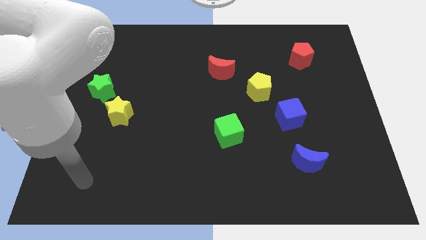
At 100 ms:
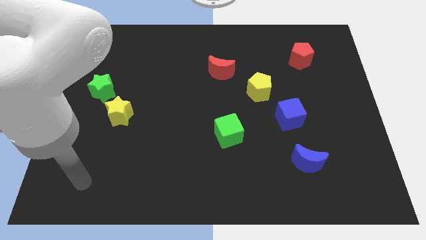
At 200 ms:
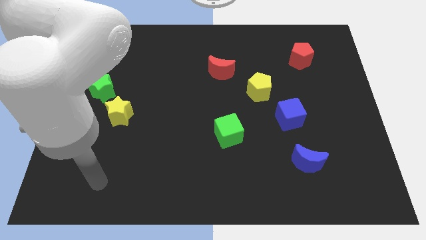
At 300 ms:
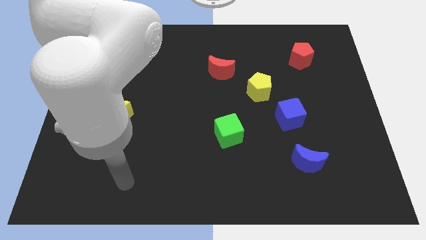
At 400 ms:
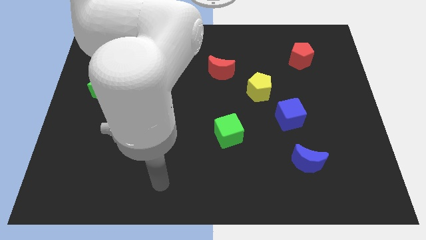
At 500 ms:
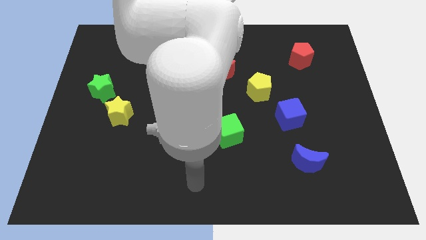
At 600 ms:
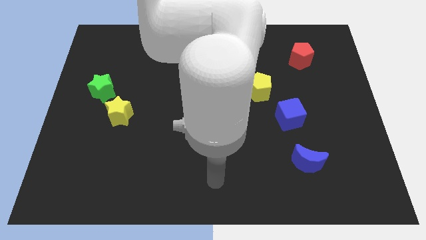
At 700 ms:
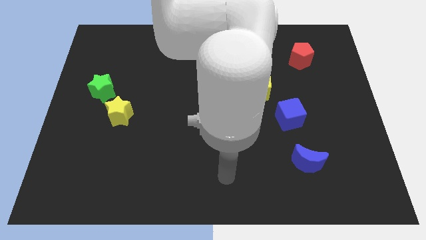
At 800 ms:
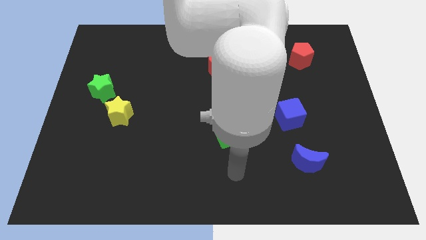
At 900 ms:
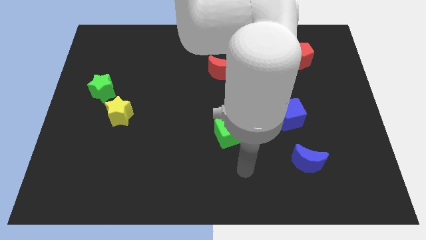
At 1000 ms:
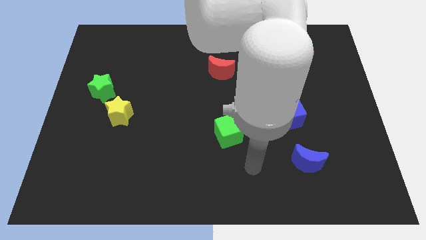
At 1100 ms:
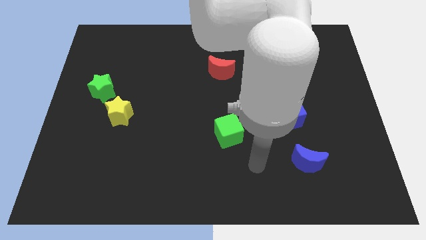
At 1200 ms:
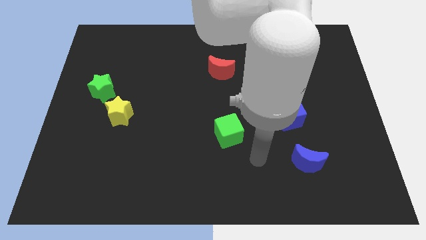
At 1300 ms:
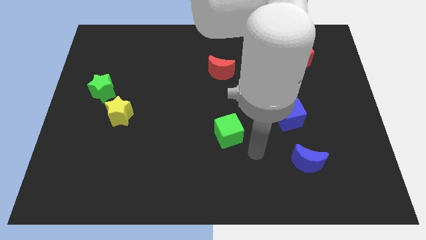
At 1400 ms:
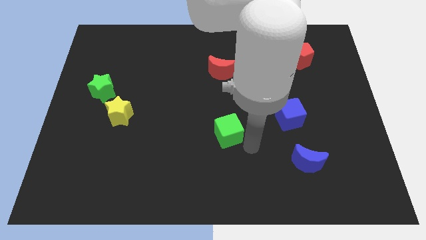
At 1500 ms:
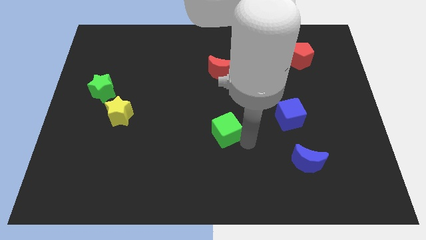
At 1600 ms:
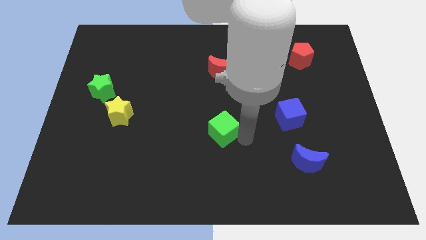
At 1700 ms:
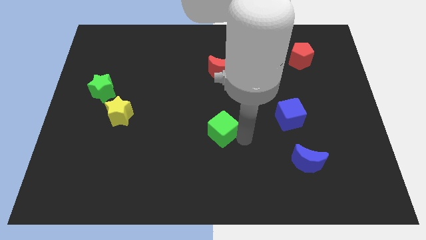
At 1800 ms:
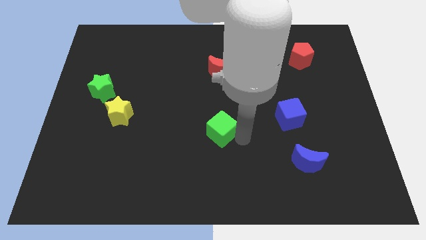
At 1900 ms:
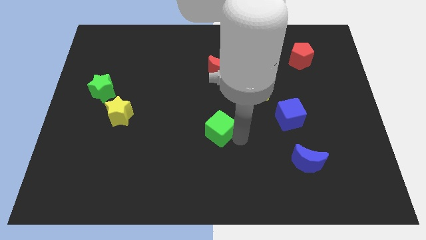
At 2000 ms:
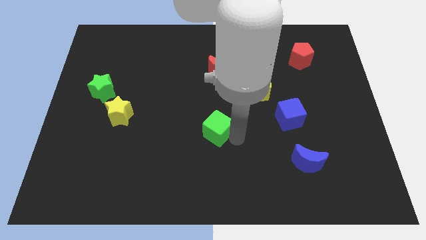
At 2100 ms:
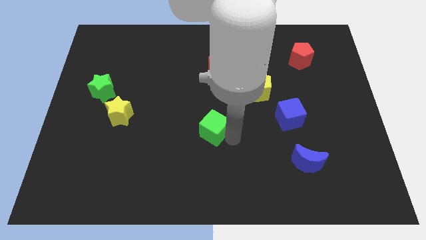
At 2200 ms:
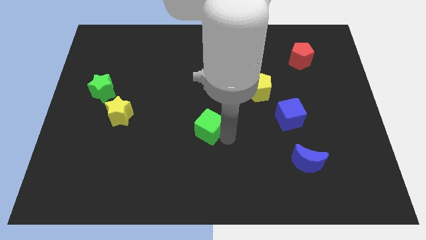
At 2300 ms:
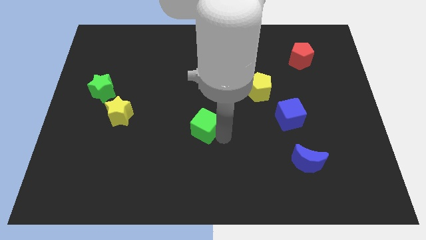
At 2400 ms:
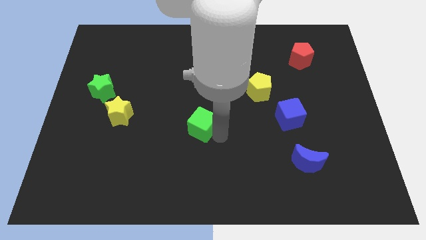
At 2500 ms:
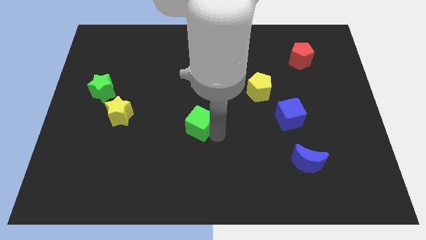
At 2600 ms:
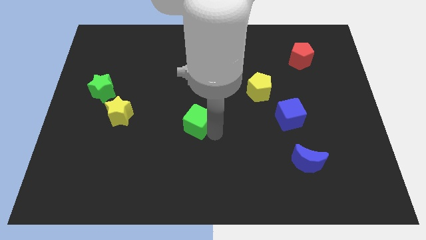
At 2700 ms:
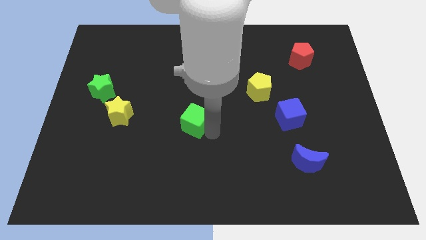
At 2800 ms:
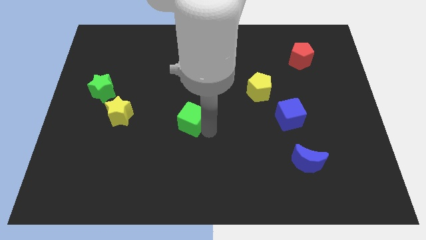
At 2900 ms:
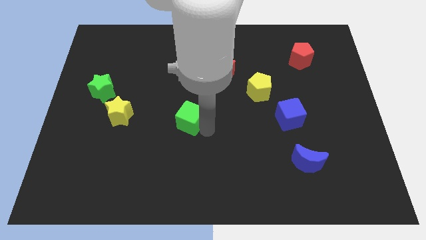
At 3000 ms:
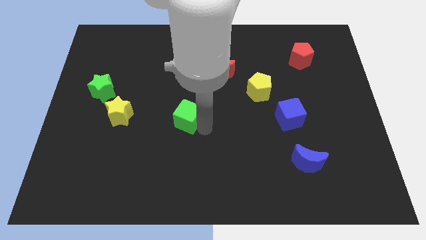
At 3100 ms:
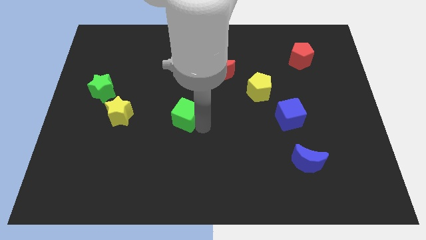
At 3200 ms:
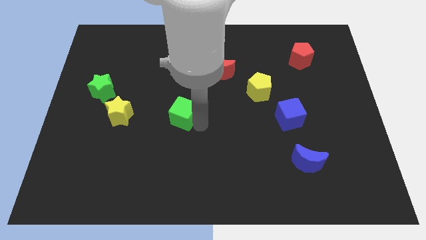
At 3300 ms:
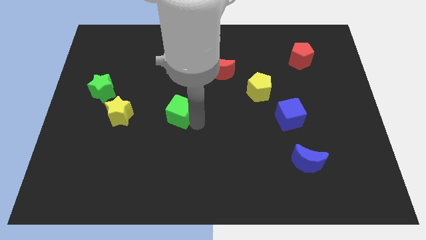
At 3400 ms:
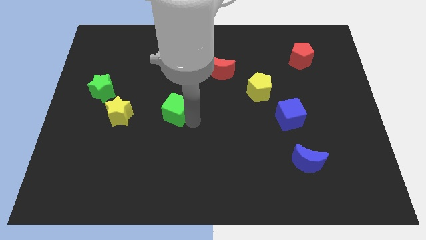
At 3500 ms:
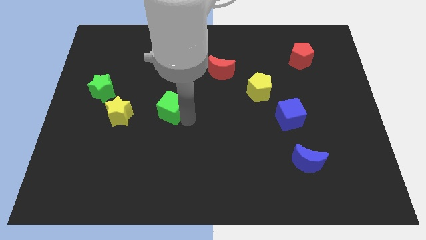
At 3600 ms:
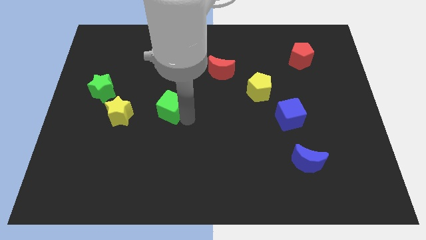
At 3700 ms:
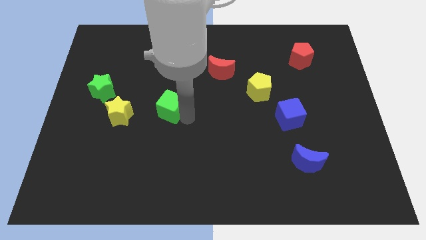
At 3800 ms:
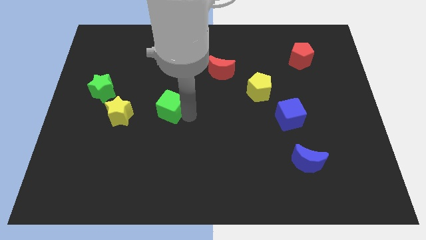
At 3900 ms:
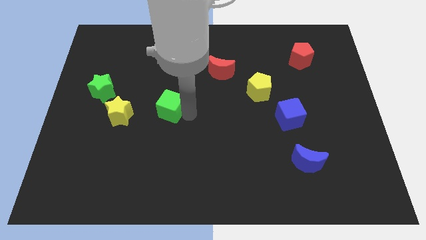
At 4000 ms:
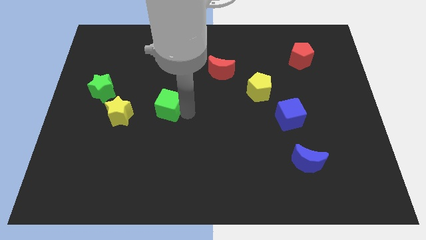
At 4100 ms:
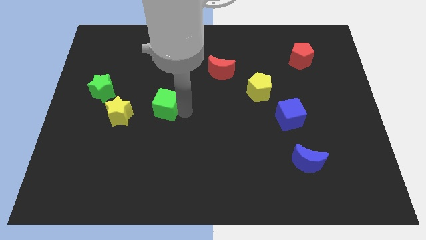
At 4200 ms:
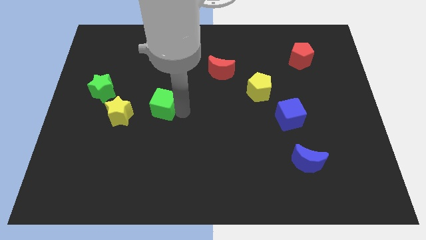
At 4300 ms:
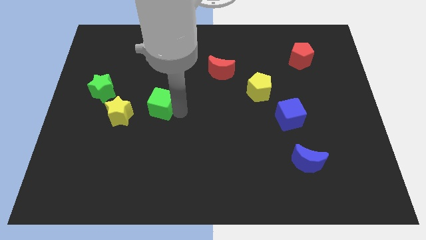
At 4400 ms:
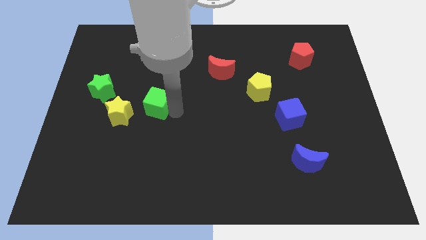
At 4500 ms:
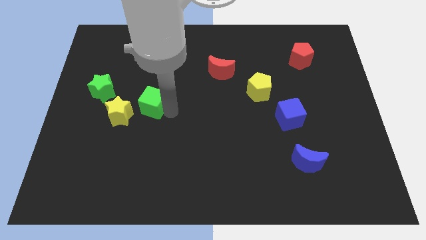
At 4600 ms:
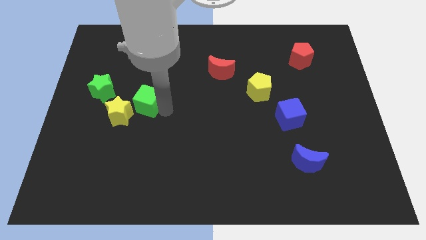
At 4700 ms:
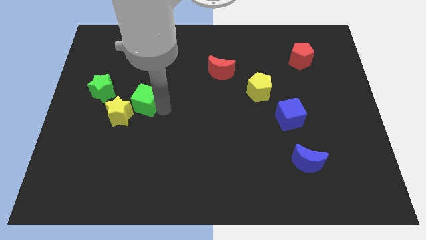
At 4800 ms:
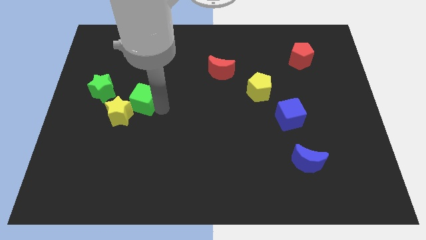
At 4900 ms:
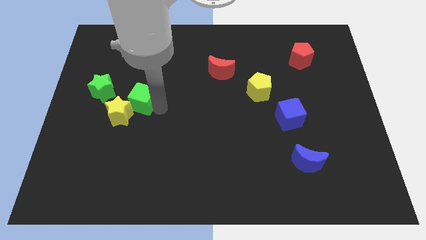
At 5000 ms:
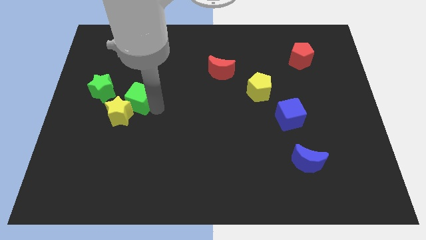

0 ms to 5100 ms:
move the green cube close to the yellow star

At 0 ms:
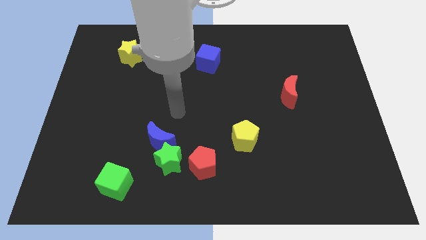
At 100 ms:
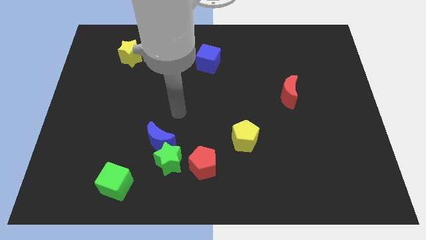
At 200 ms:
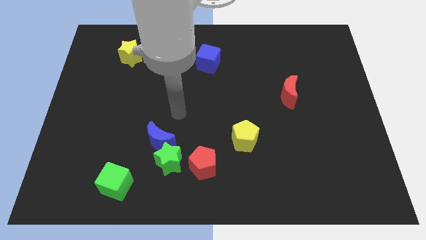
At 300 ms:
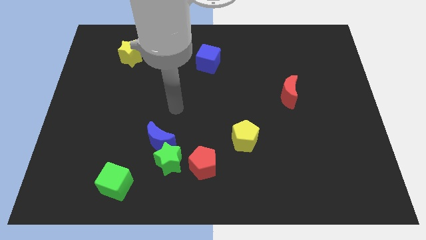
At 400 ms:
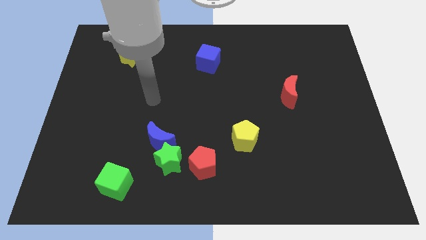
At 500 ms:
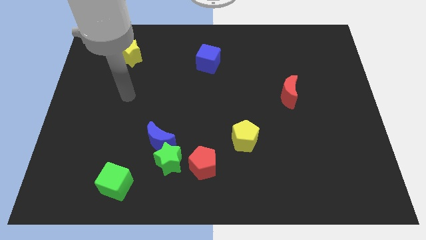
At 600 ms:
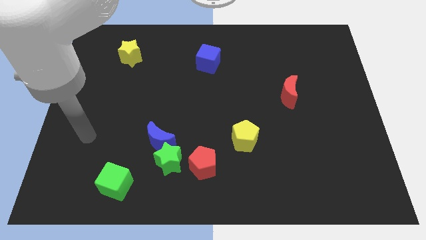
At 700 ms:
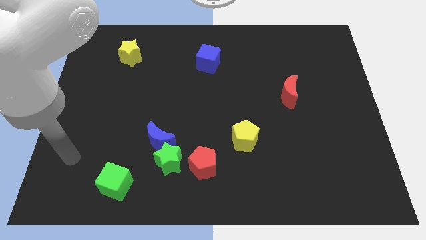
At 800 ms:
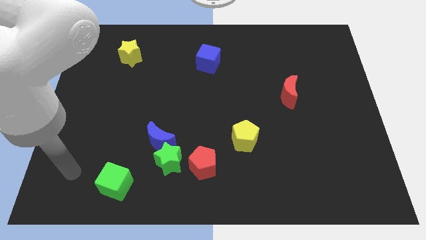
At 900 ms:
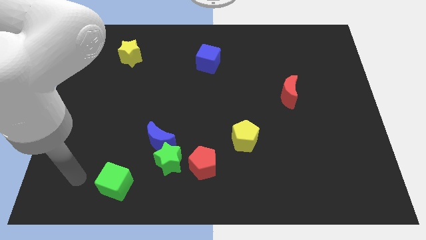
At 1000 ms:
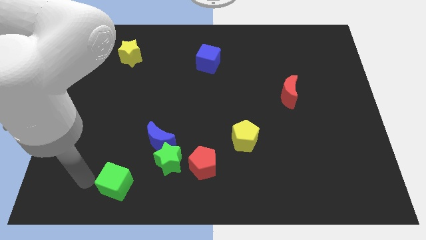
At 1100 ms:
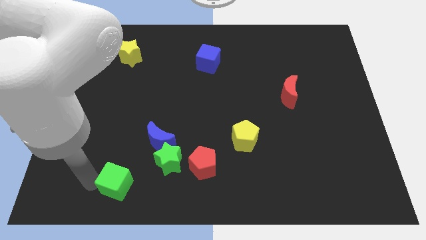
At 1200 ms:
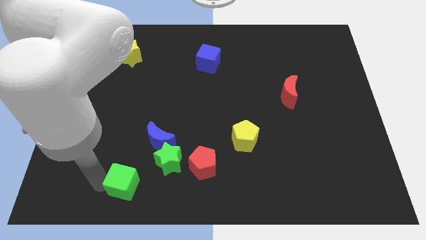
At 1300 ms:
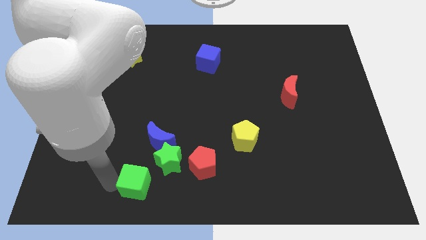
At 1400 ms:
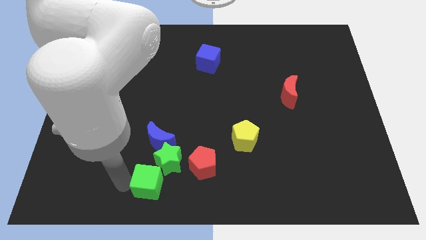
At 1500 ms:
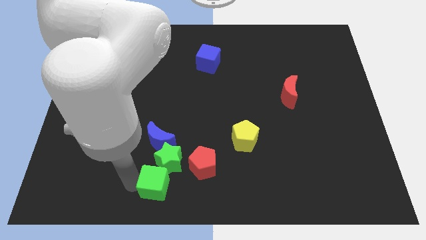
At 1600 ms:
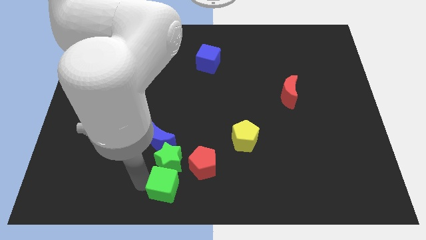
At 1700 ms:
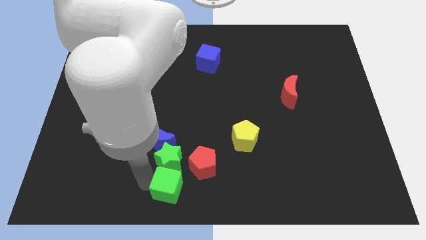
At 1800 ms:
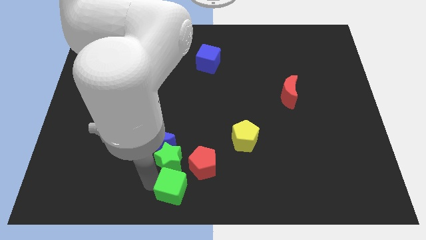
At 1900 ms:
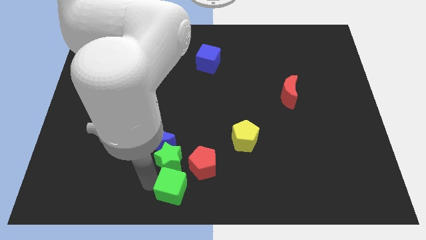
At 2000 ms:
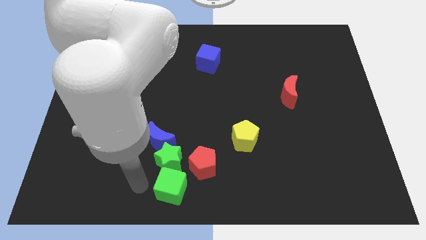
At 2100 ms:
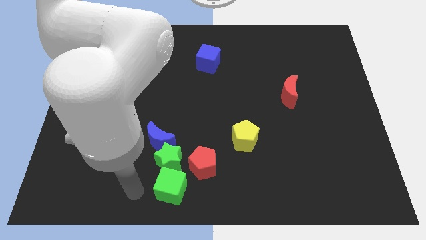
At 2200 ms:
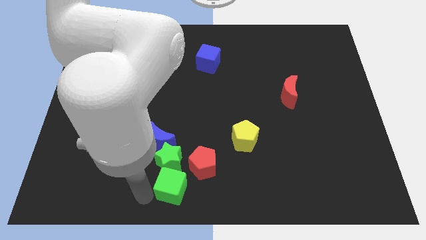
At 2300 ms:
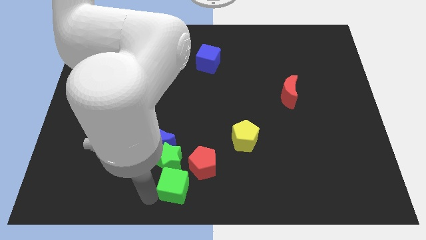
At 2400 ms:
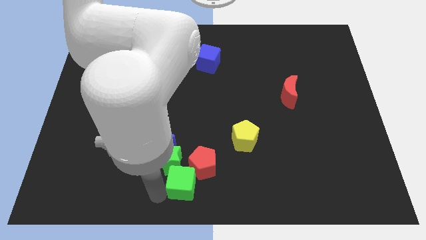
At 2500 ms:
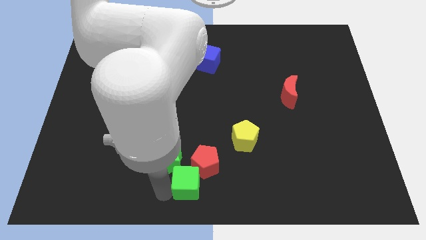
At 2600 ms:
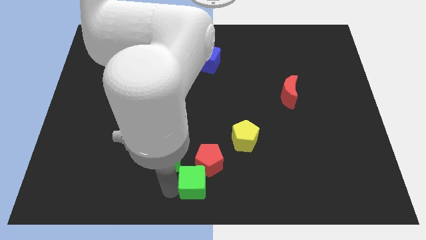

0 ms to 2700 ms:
slide the green cube next to the red pentagon

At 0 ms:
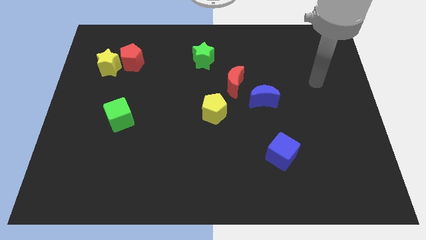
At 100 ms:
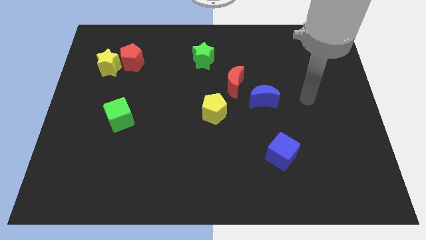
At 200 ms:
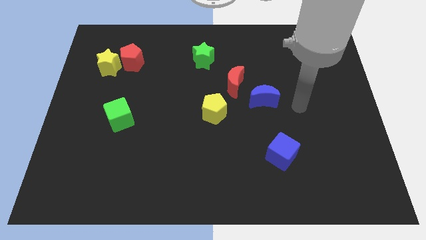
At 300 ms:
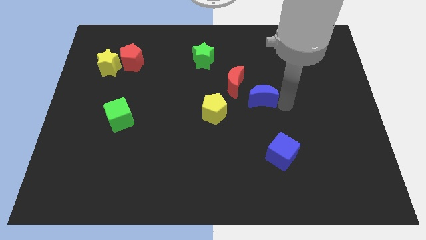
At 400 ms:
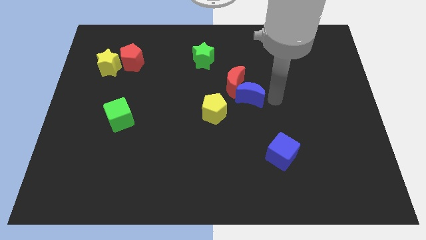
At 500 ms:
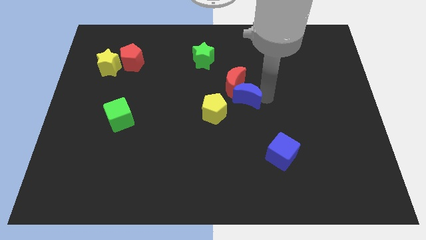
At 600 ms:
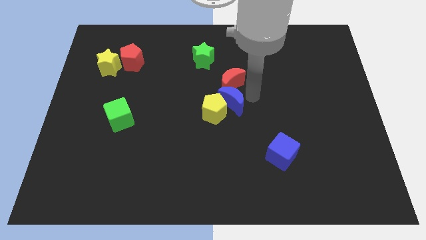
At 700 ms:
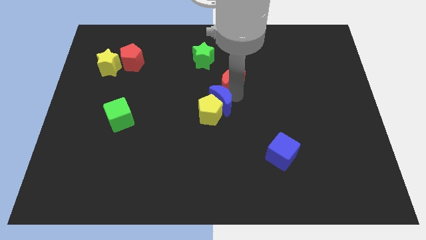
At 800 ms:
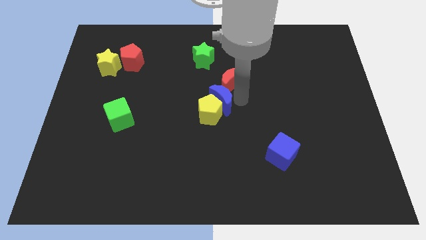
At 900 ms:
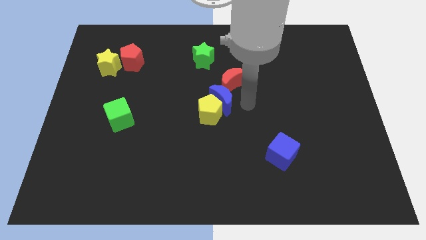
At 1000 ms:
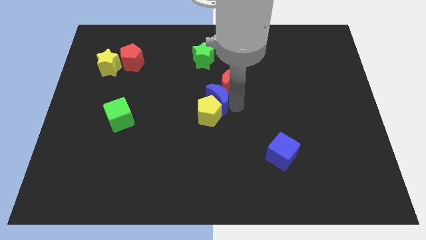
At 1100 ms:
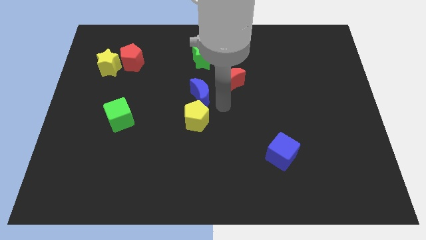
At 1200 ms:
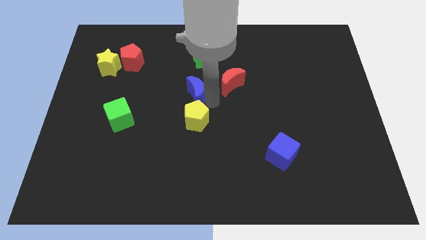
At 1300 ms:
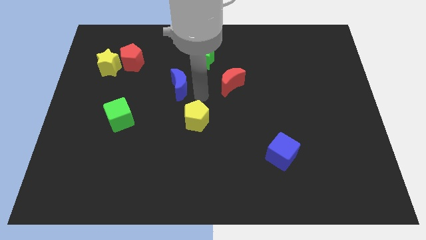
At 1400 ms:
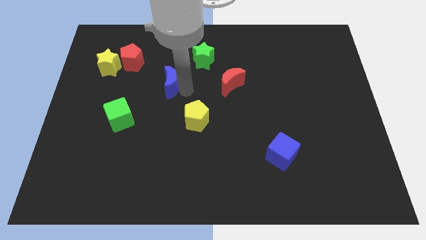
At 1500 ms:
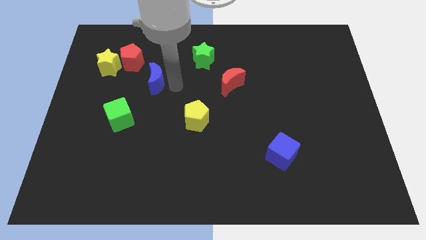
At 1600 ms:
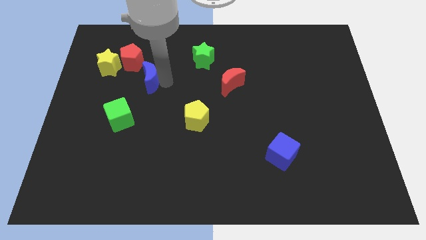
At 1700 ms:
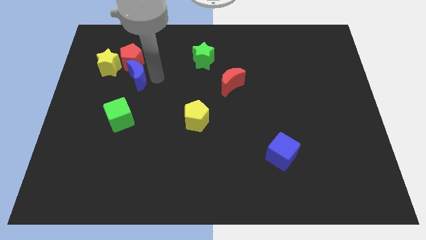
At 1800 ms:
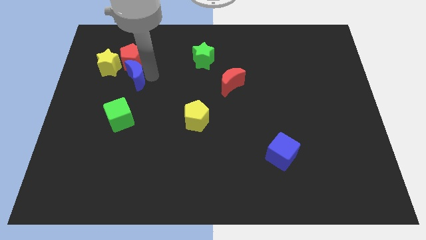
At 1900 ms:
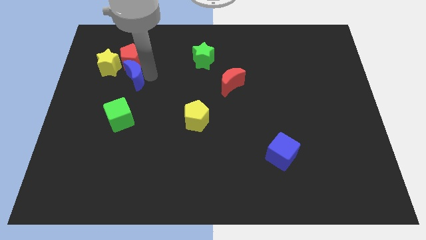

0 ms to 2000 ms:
push the blue moon close to the red pentagon
